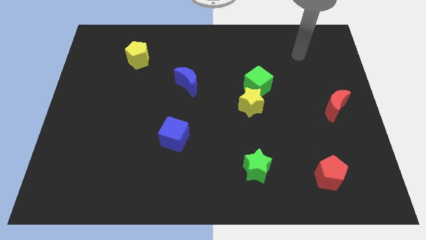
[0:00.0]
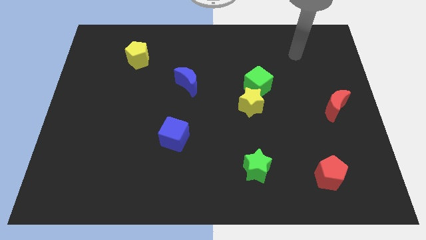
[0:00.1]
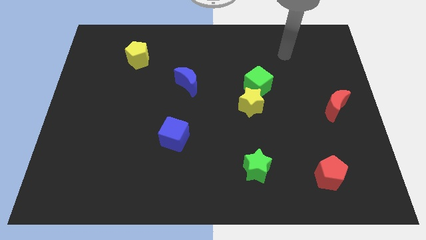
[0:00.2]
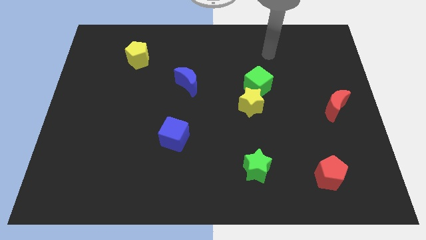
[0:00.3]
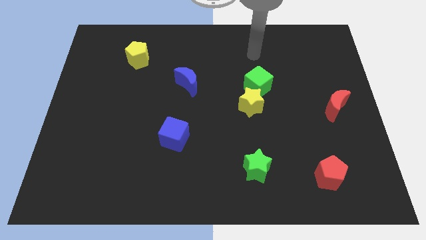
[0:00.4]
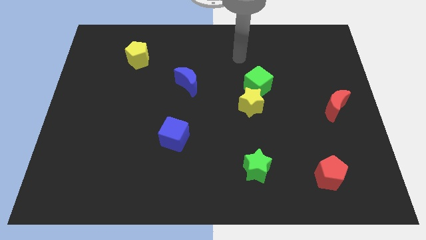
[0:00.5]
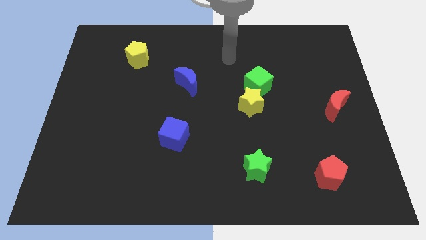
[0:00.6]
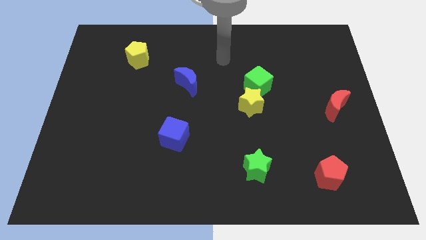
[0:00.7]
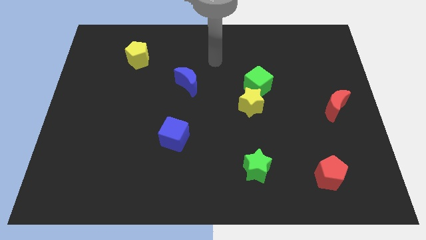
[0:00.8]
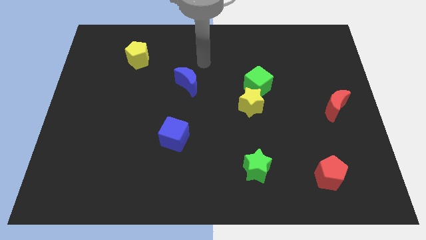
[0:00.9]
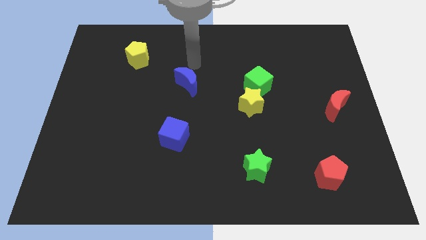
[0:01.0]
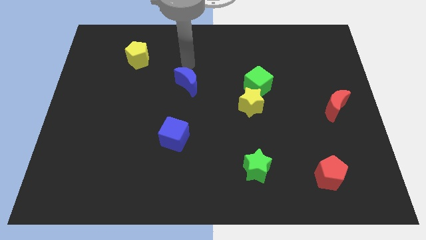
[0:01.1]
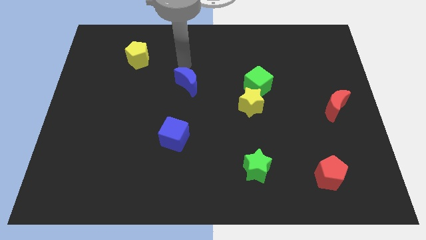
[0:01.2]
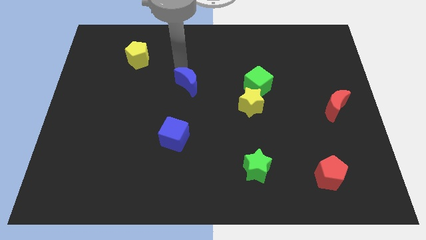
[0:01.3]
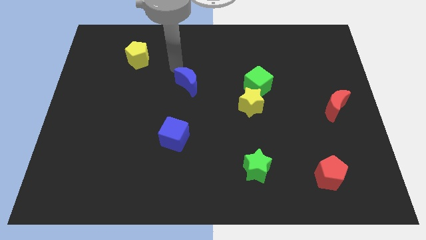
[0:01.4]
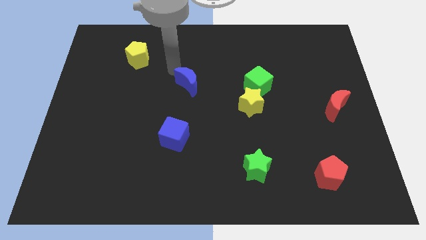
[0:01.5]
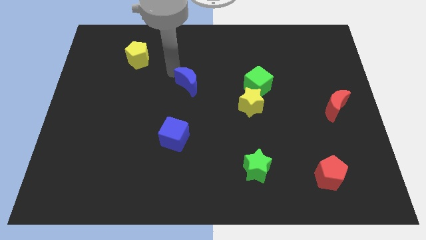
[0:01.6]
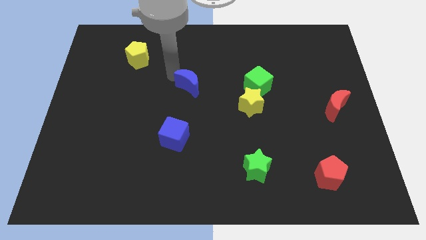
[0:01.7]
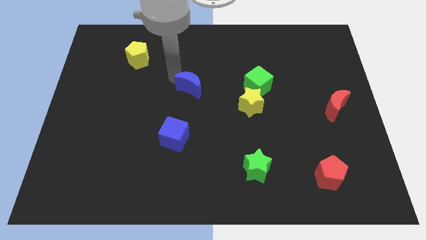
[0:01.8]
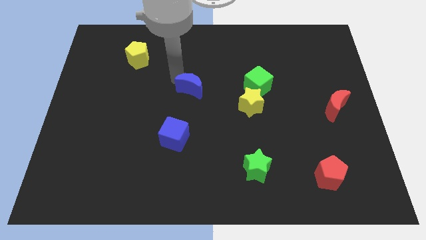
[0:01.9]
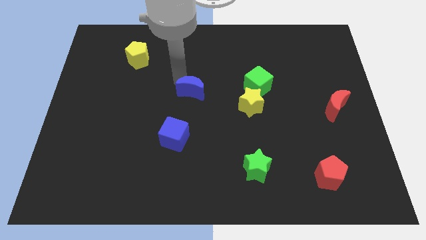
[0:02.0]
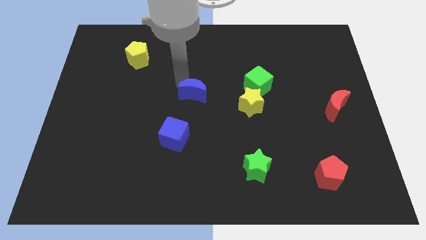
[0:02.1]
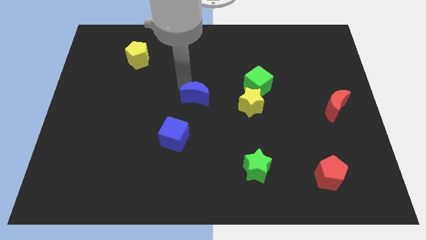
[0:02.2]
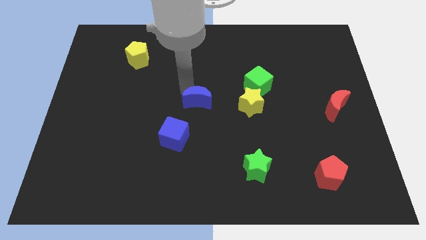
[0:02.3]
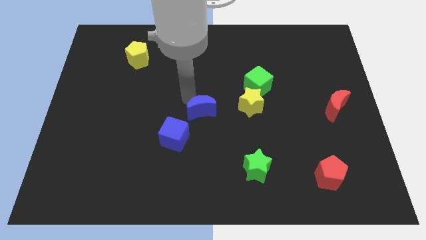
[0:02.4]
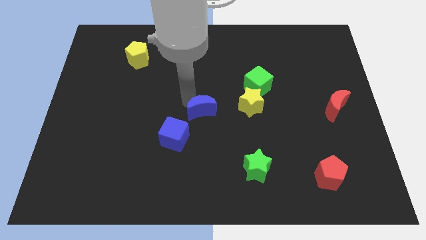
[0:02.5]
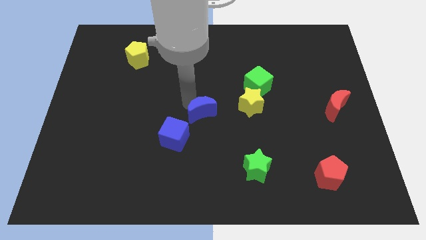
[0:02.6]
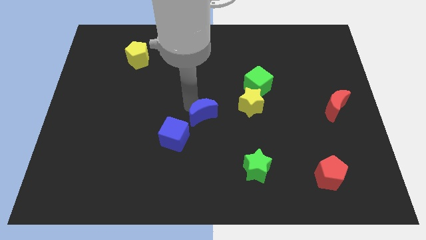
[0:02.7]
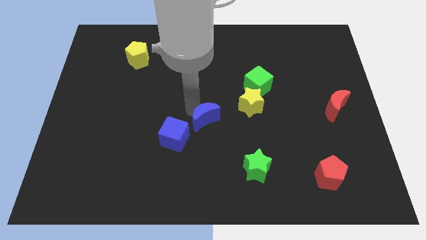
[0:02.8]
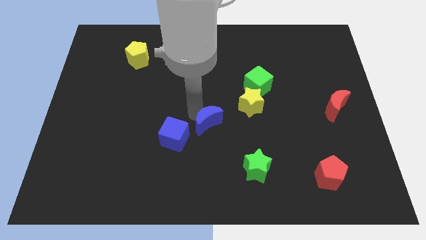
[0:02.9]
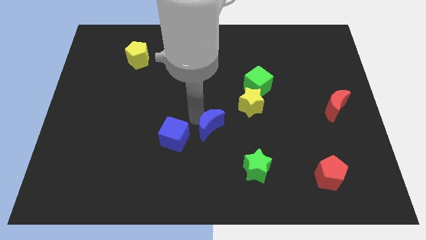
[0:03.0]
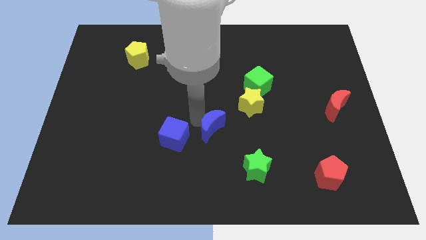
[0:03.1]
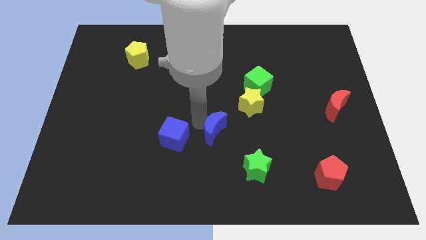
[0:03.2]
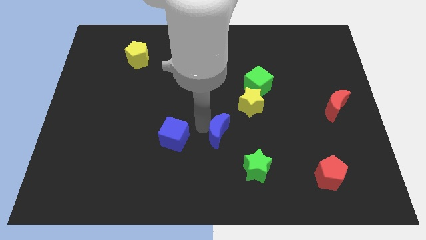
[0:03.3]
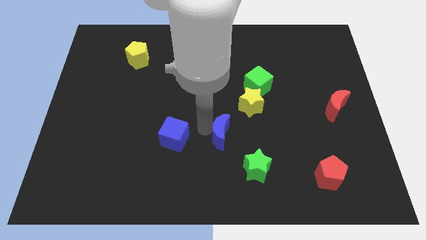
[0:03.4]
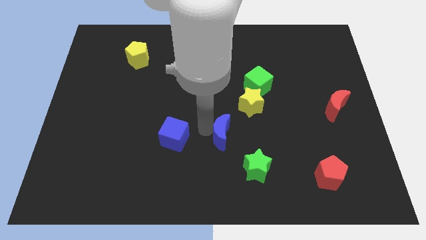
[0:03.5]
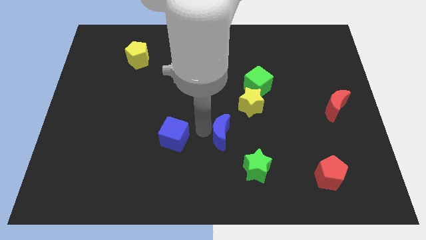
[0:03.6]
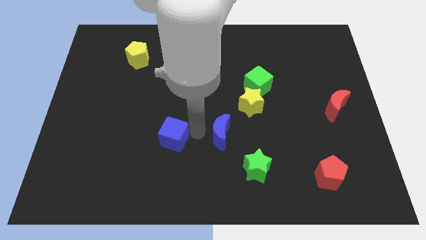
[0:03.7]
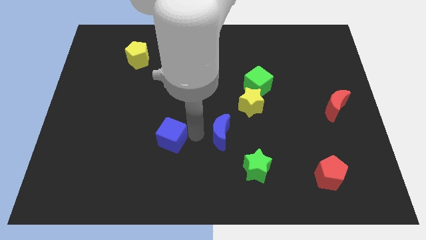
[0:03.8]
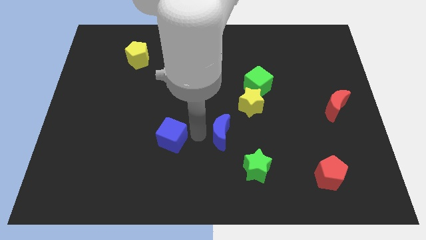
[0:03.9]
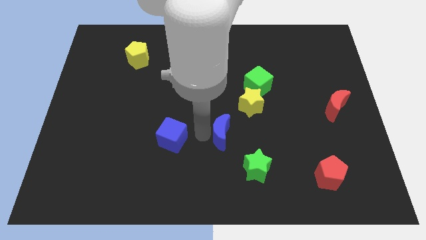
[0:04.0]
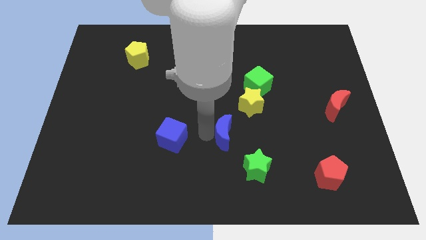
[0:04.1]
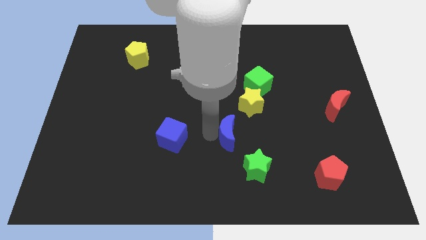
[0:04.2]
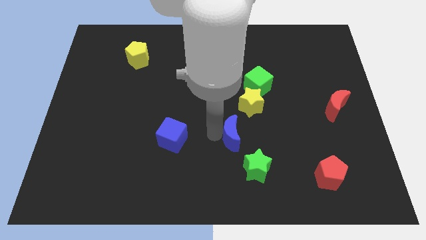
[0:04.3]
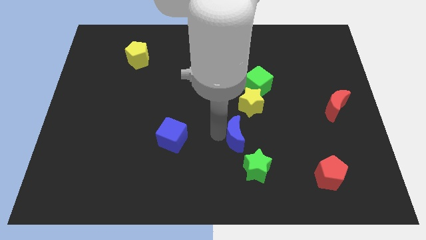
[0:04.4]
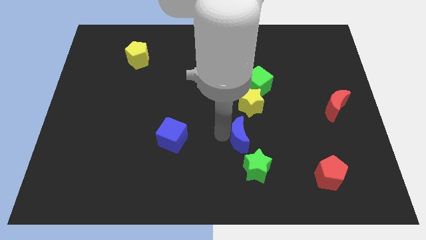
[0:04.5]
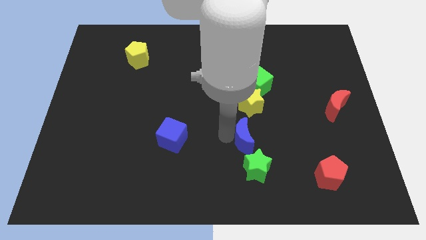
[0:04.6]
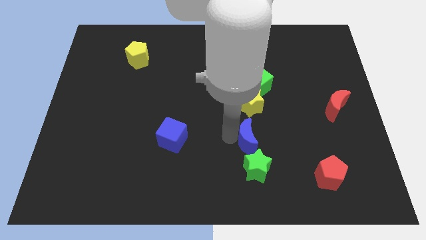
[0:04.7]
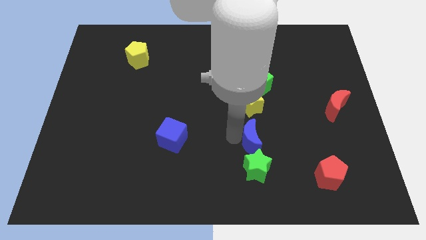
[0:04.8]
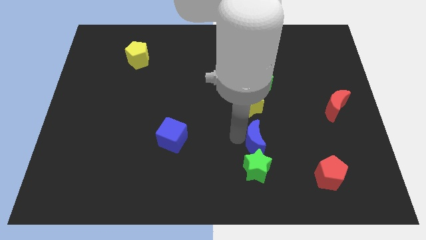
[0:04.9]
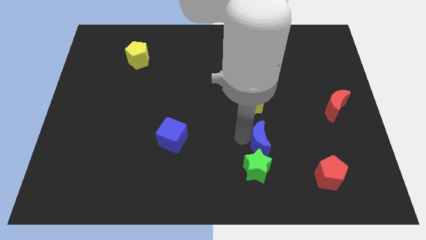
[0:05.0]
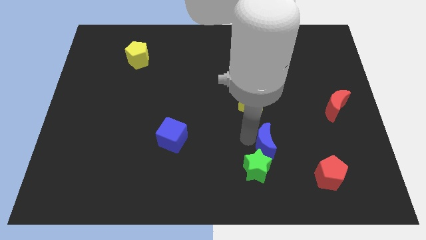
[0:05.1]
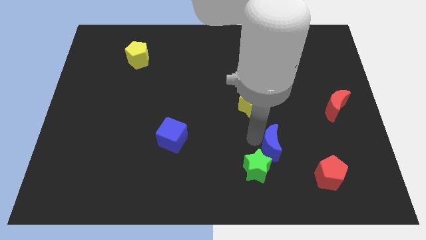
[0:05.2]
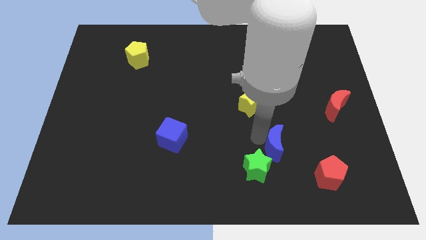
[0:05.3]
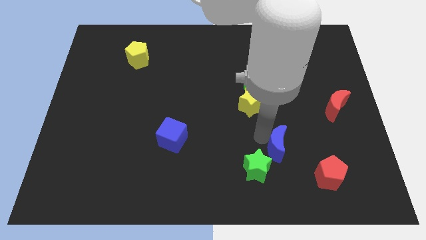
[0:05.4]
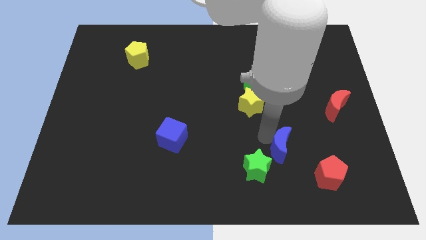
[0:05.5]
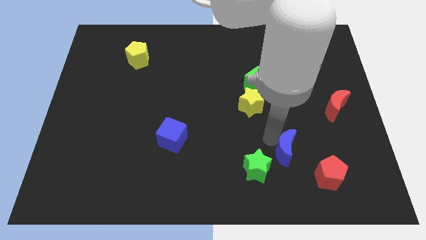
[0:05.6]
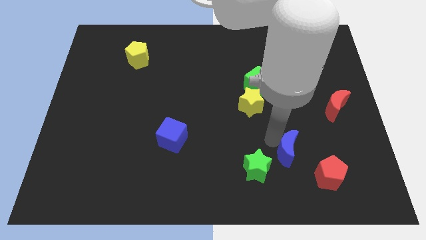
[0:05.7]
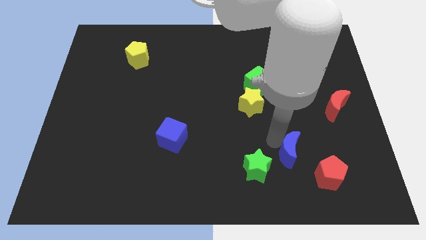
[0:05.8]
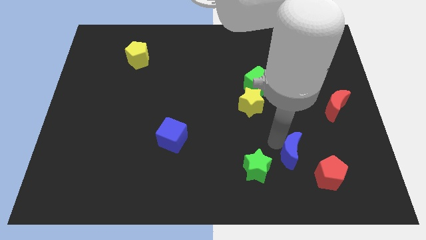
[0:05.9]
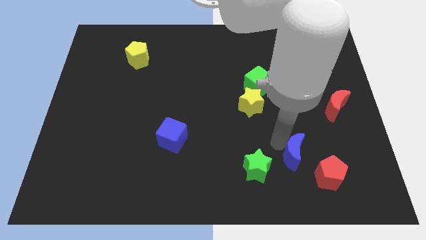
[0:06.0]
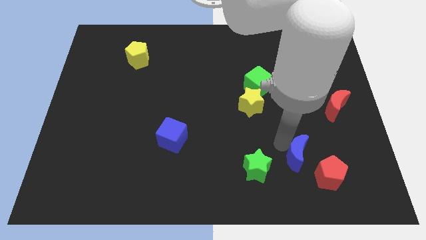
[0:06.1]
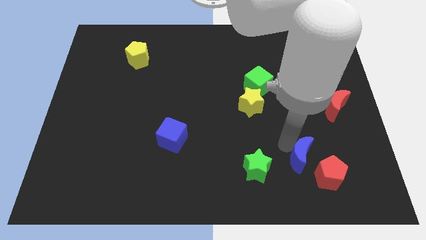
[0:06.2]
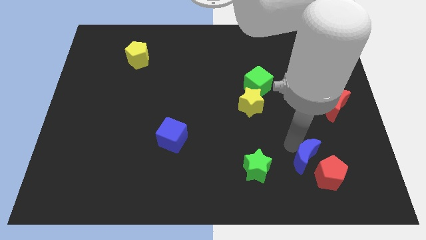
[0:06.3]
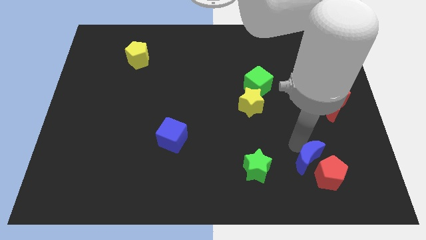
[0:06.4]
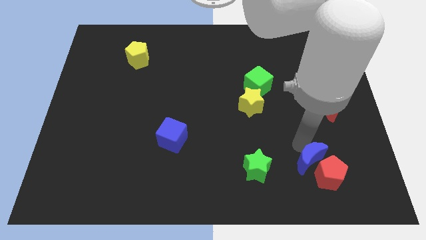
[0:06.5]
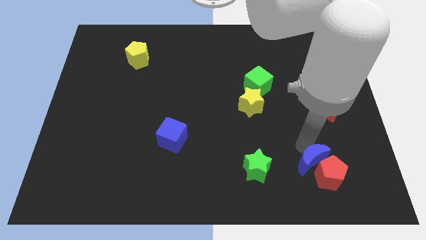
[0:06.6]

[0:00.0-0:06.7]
move the blue moon close to the red pentagon

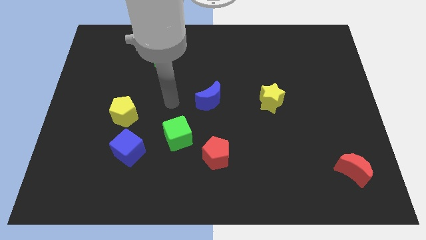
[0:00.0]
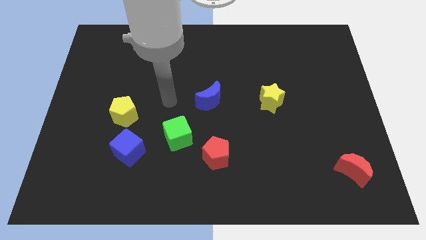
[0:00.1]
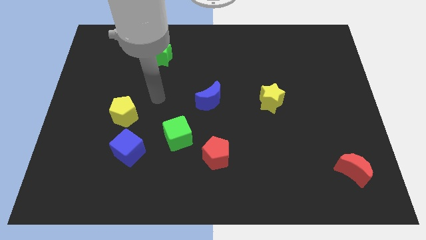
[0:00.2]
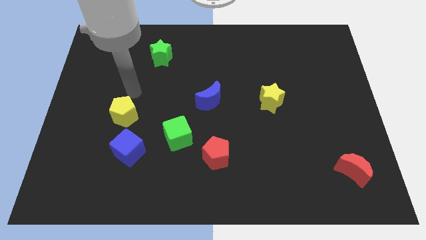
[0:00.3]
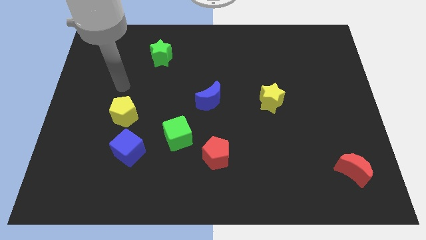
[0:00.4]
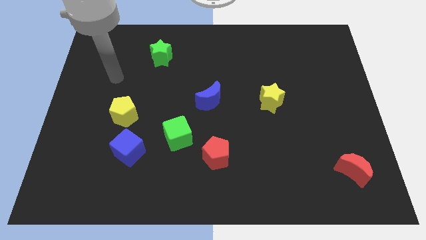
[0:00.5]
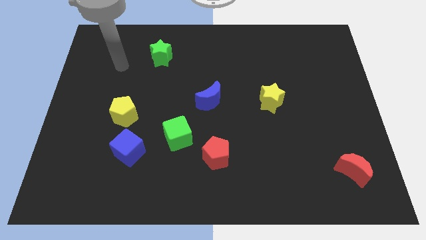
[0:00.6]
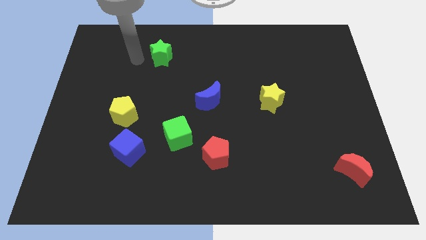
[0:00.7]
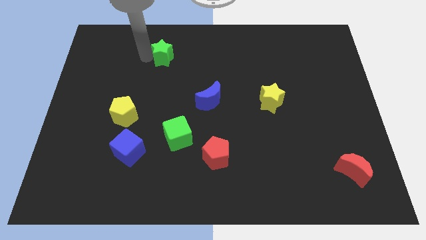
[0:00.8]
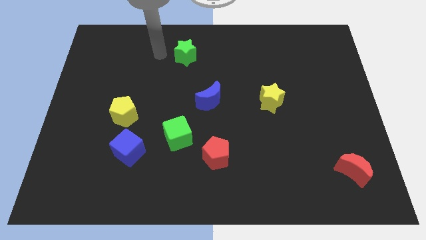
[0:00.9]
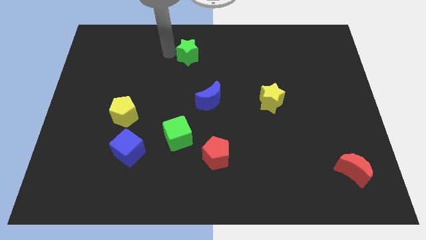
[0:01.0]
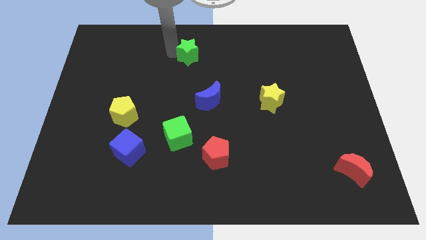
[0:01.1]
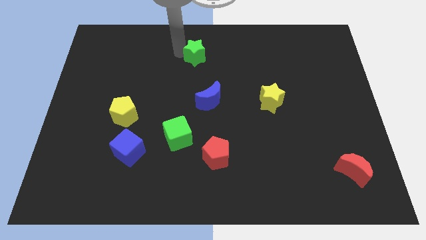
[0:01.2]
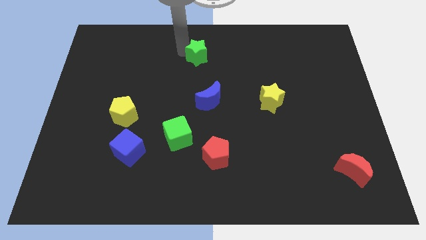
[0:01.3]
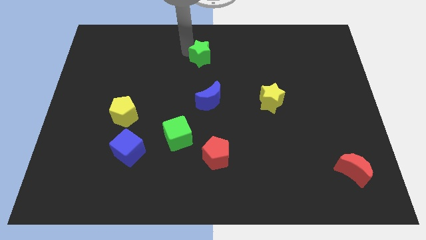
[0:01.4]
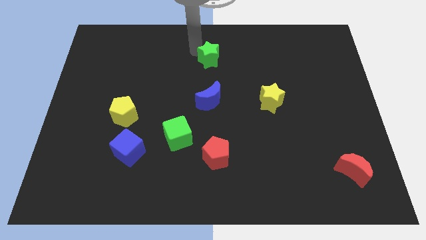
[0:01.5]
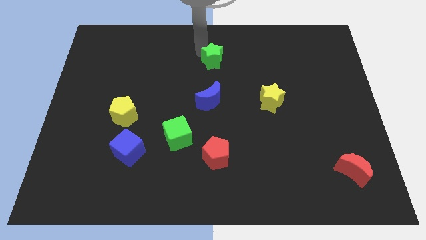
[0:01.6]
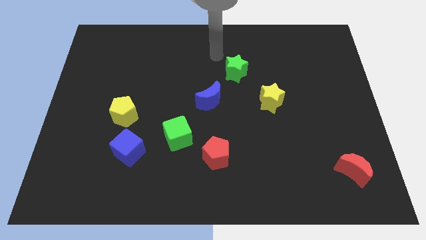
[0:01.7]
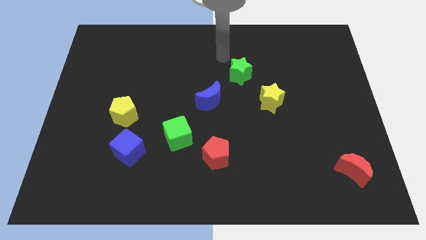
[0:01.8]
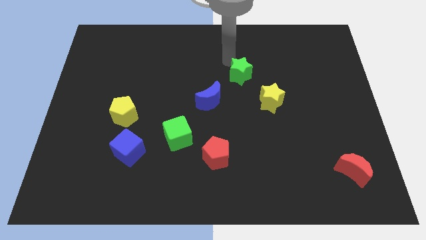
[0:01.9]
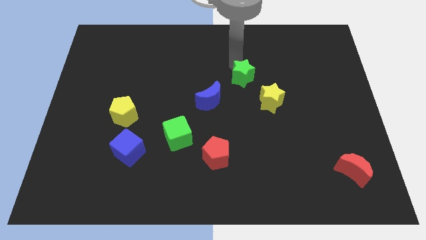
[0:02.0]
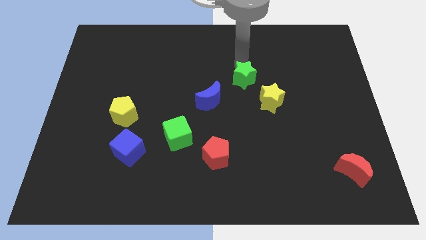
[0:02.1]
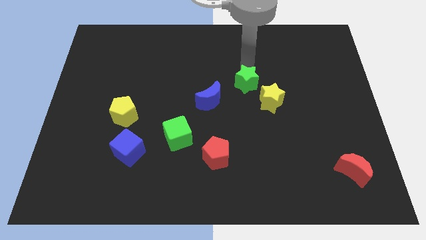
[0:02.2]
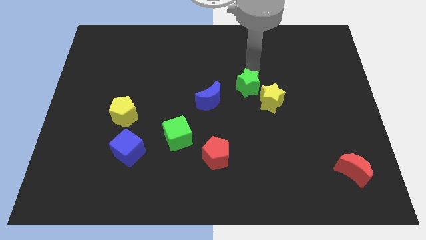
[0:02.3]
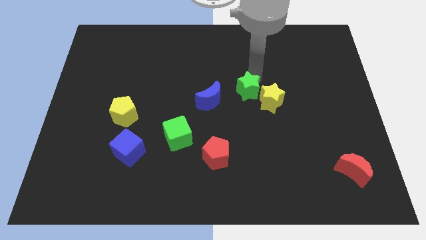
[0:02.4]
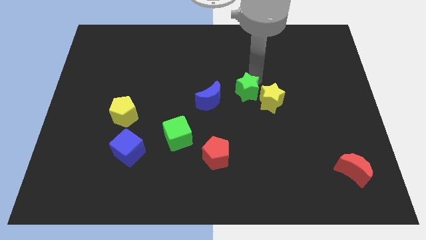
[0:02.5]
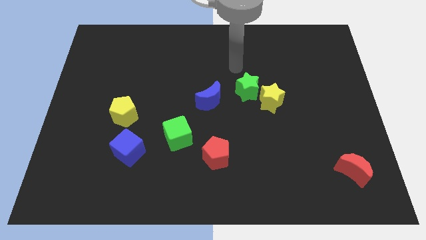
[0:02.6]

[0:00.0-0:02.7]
put the green star next to the yellow star
